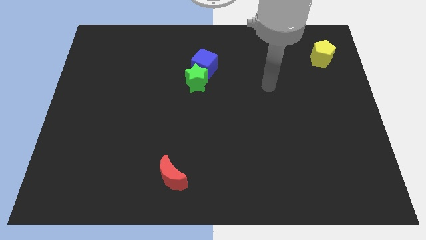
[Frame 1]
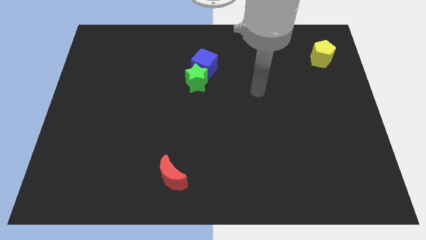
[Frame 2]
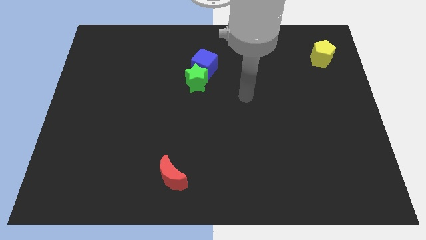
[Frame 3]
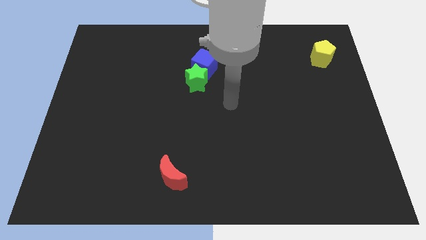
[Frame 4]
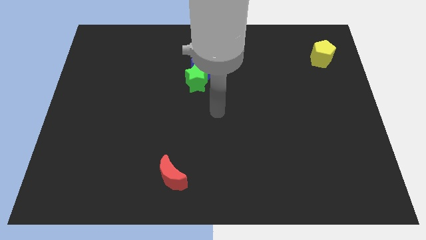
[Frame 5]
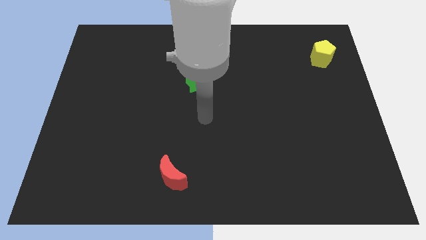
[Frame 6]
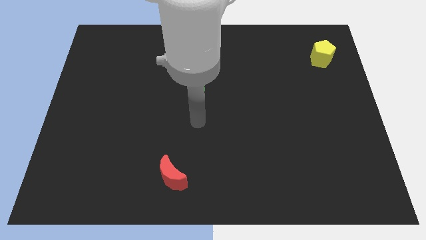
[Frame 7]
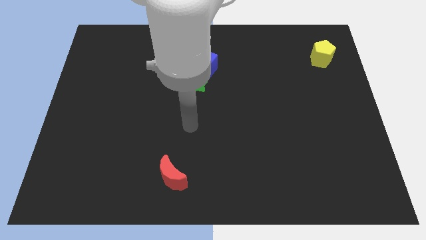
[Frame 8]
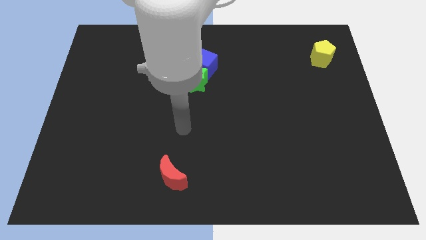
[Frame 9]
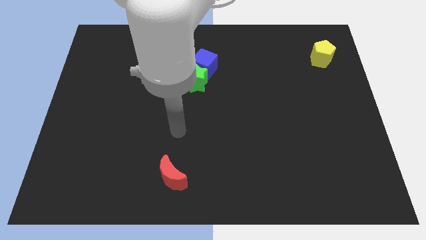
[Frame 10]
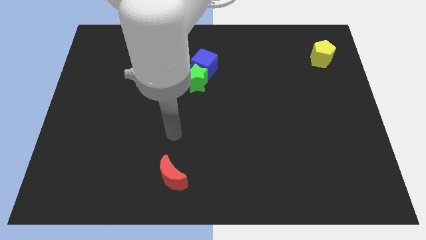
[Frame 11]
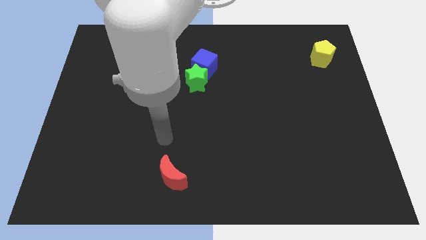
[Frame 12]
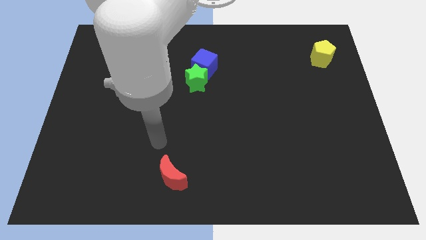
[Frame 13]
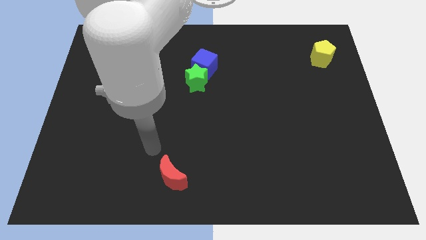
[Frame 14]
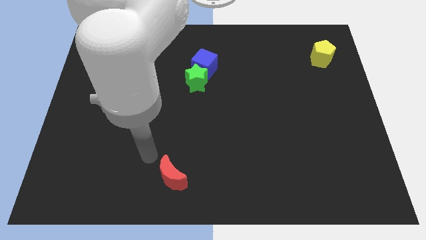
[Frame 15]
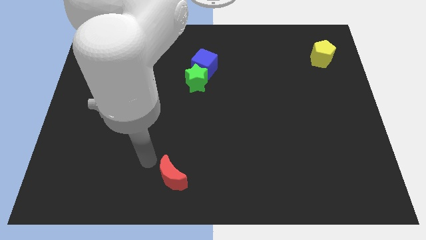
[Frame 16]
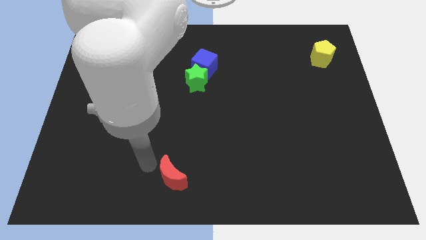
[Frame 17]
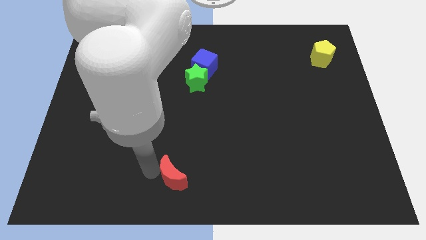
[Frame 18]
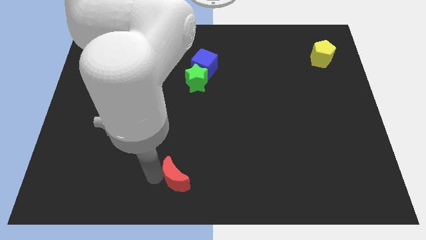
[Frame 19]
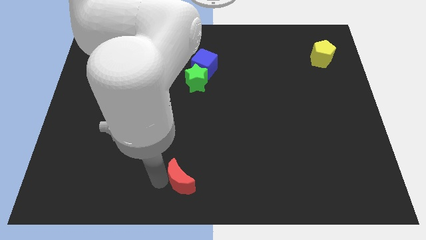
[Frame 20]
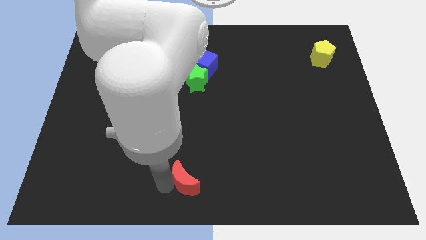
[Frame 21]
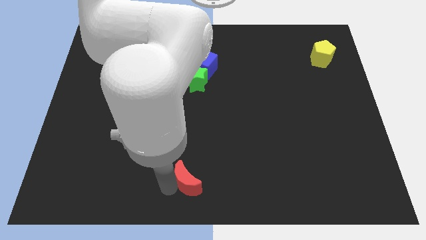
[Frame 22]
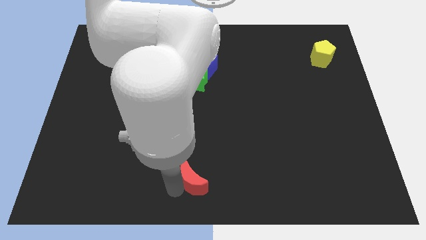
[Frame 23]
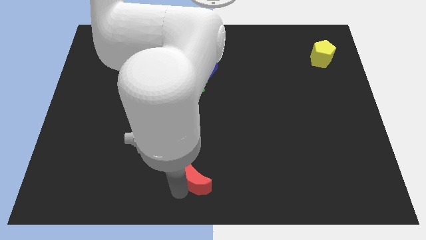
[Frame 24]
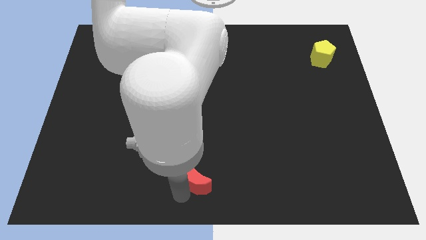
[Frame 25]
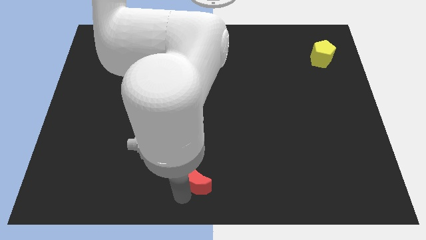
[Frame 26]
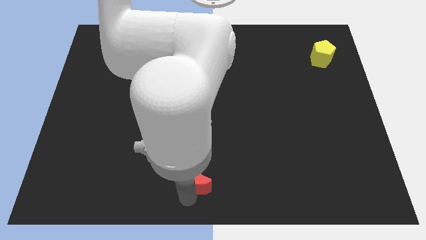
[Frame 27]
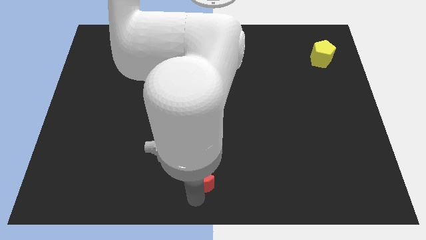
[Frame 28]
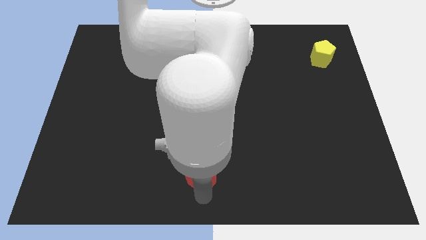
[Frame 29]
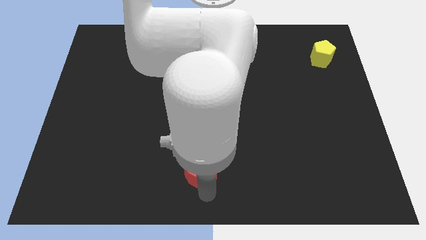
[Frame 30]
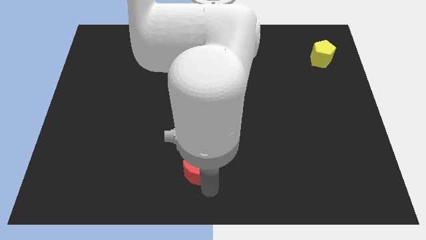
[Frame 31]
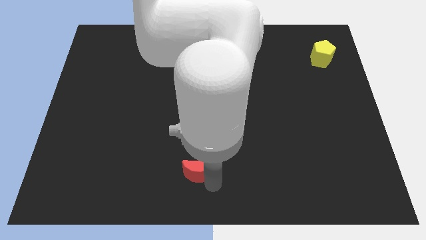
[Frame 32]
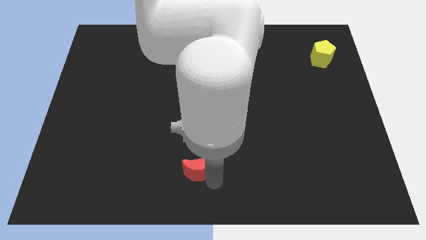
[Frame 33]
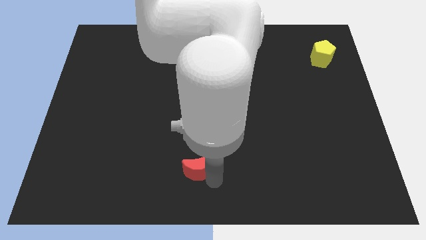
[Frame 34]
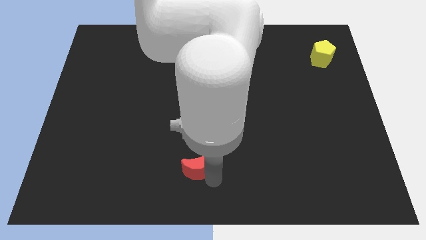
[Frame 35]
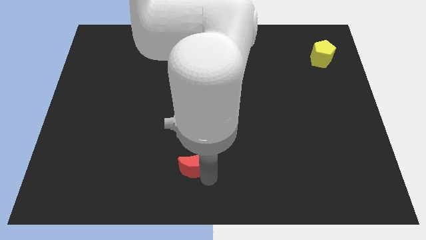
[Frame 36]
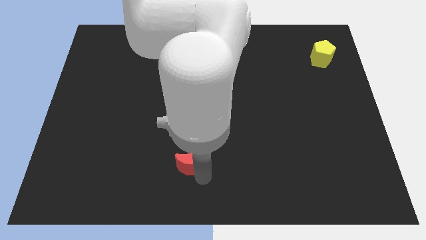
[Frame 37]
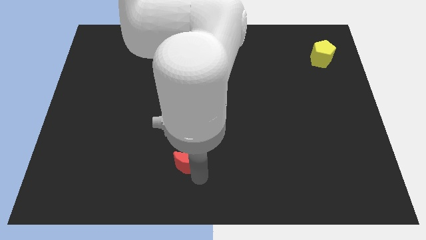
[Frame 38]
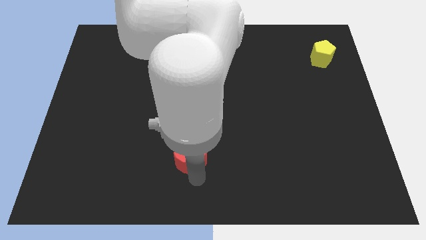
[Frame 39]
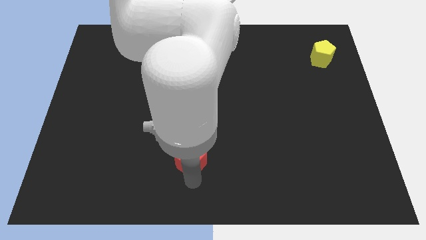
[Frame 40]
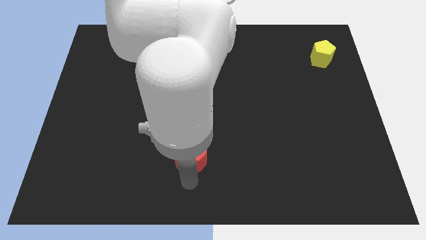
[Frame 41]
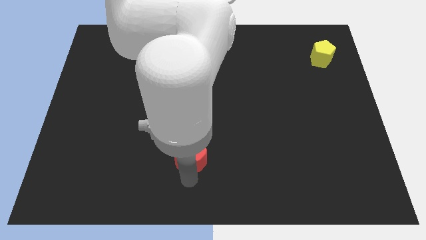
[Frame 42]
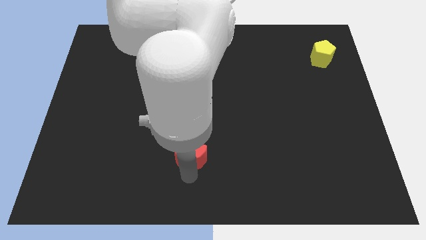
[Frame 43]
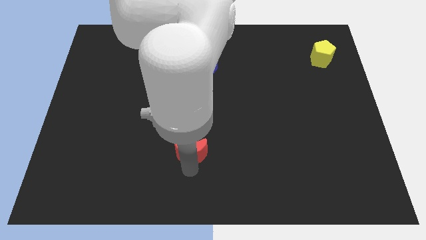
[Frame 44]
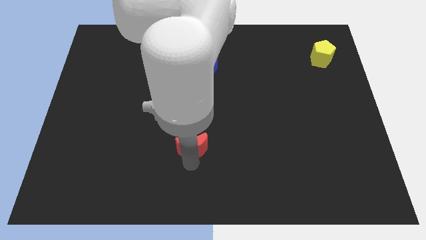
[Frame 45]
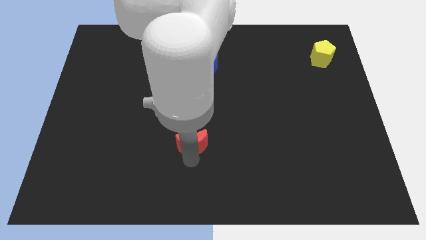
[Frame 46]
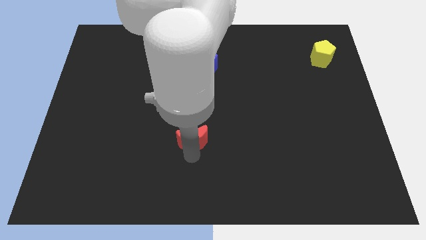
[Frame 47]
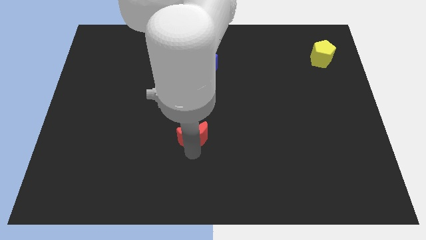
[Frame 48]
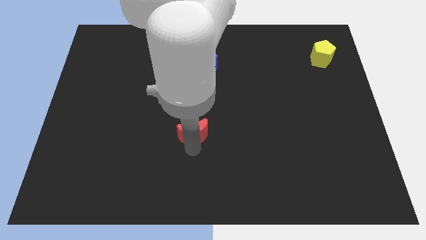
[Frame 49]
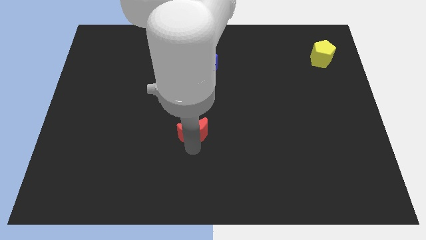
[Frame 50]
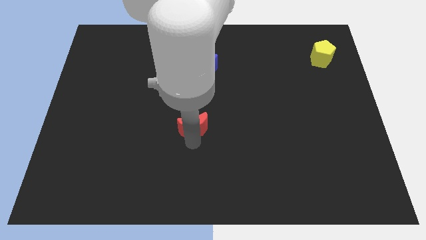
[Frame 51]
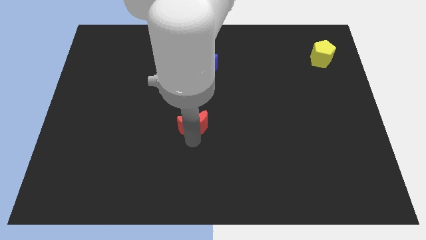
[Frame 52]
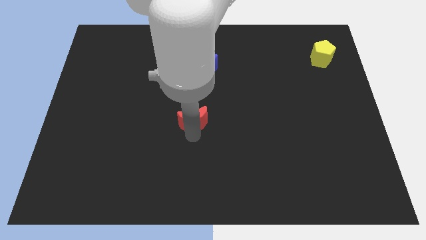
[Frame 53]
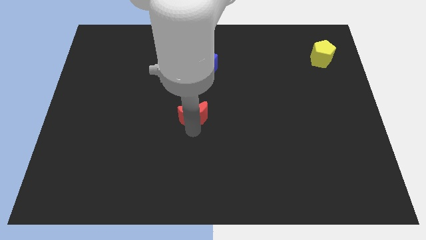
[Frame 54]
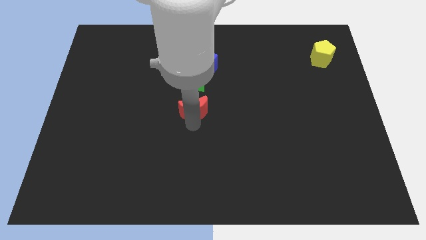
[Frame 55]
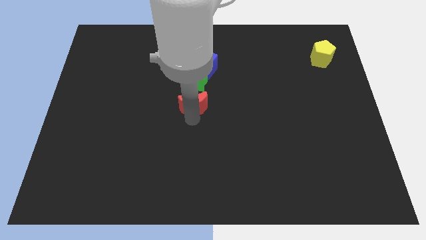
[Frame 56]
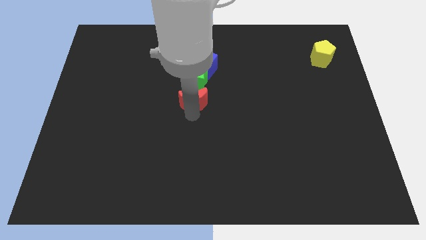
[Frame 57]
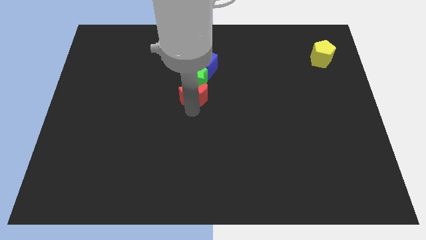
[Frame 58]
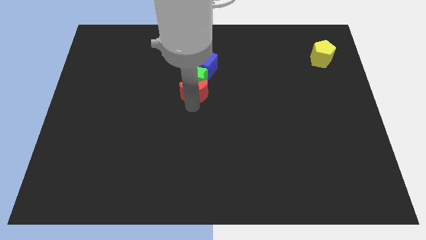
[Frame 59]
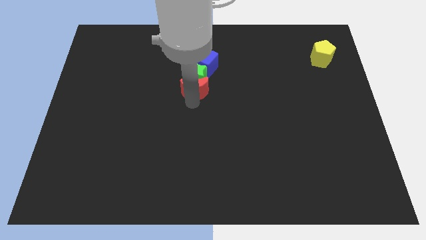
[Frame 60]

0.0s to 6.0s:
slide the red moon to the star

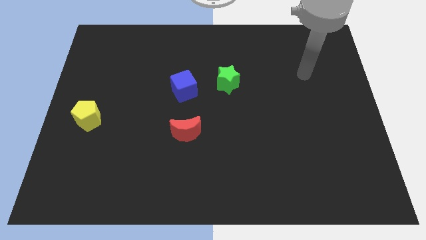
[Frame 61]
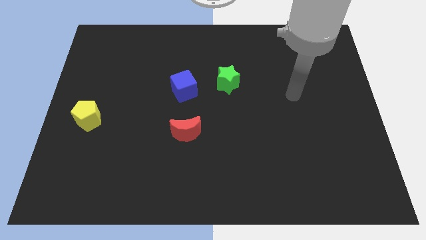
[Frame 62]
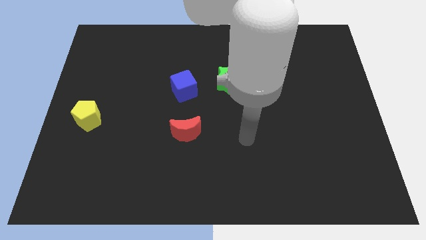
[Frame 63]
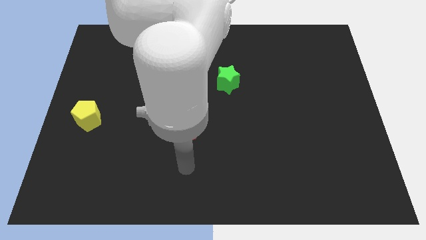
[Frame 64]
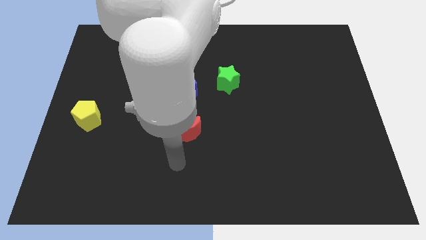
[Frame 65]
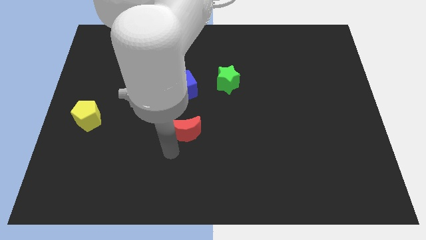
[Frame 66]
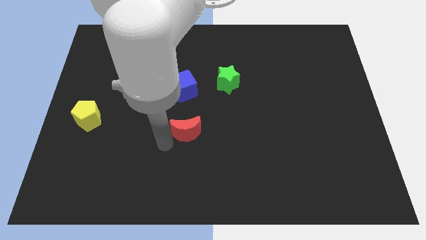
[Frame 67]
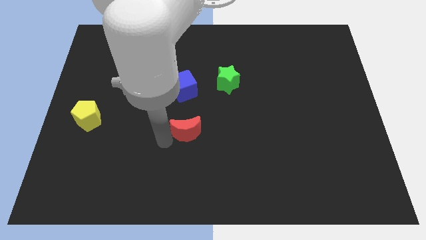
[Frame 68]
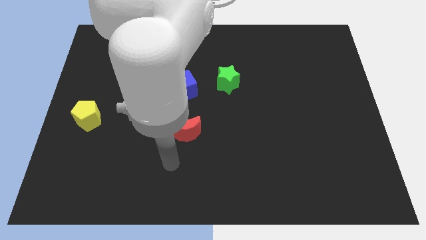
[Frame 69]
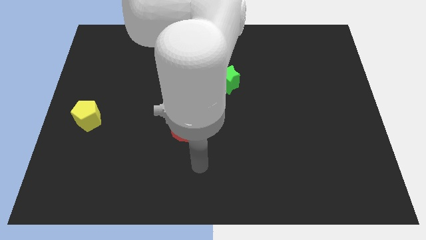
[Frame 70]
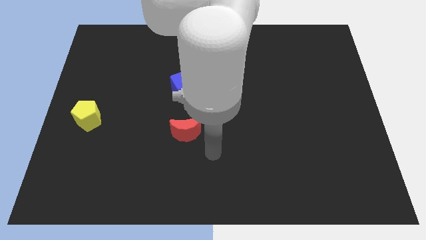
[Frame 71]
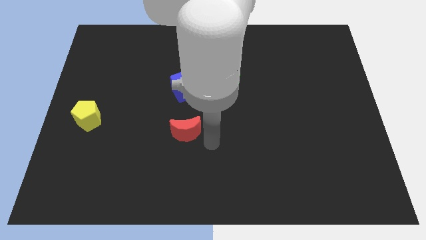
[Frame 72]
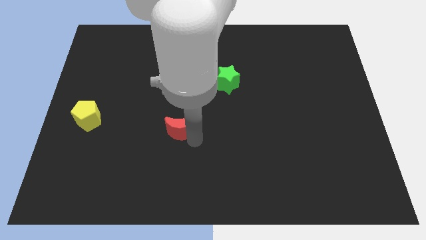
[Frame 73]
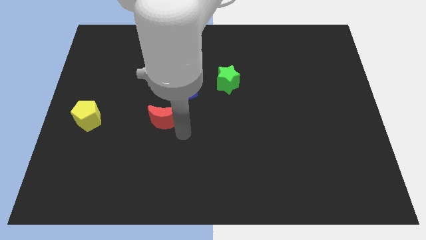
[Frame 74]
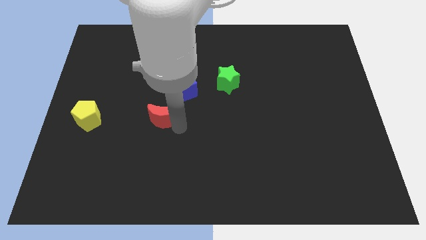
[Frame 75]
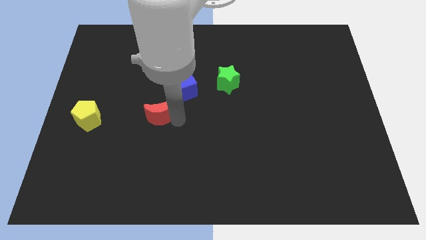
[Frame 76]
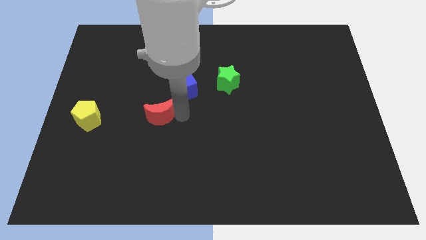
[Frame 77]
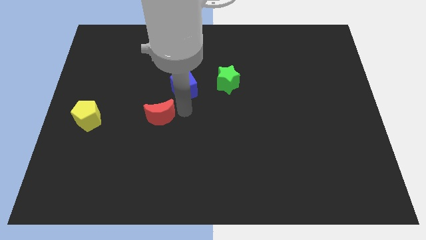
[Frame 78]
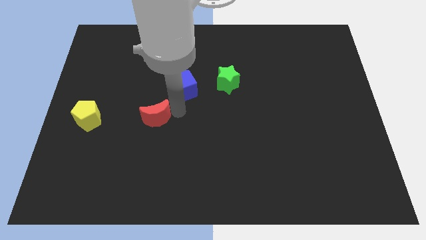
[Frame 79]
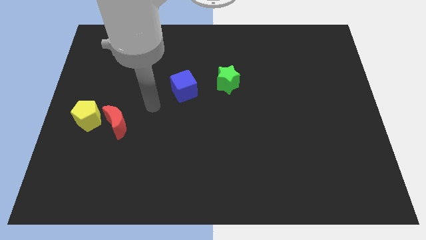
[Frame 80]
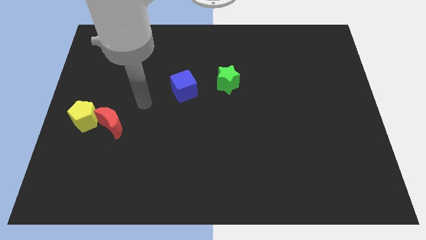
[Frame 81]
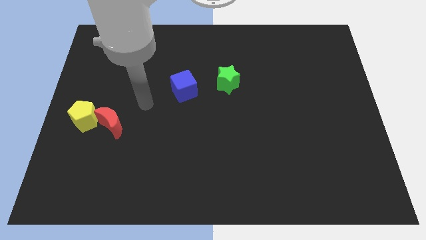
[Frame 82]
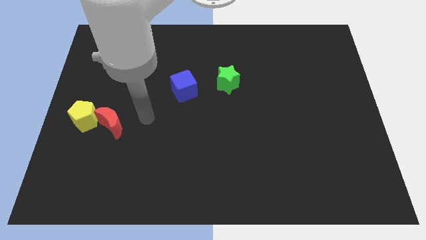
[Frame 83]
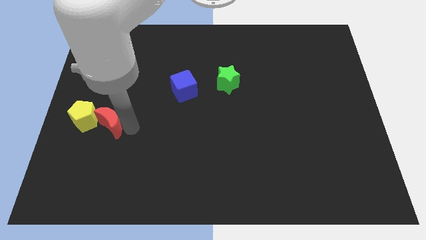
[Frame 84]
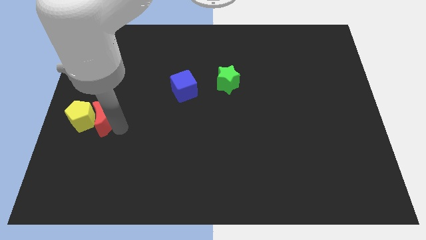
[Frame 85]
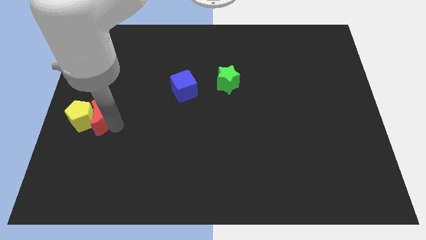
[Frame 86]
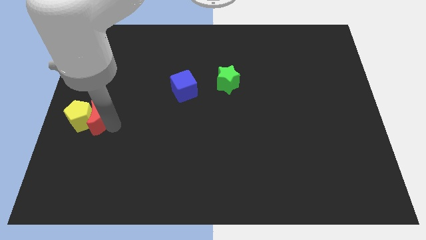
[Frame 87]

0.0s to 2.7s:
move the red moon next to the yellow block
